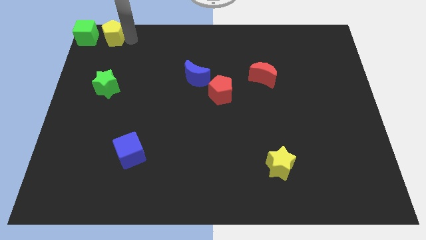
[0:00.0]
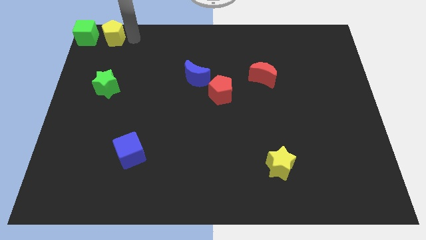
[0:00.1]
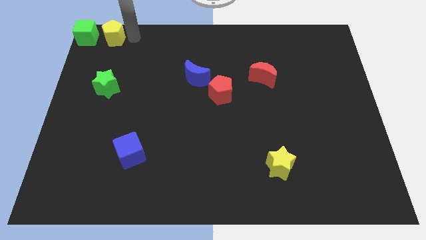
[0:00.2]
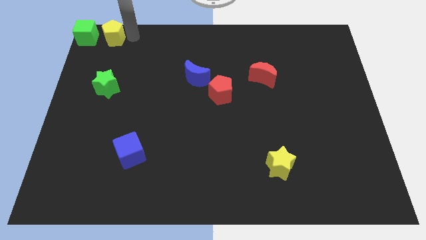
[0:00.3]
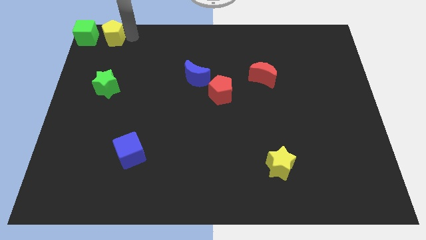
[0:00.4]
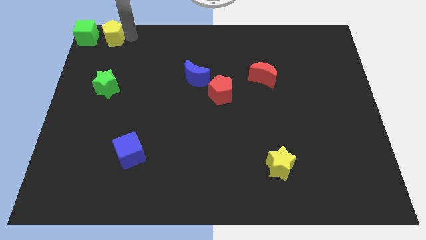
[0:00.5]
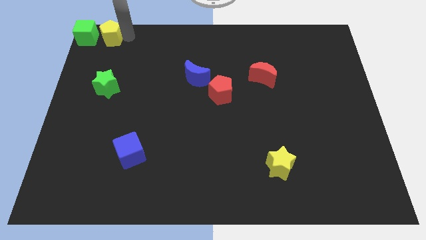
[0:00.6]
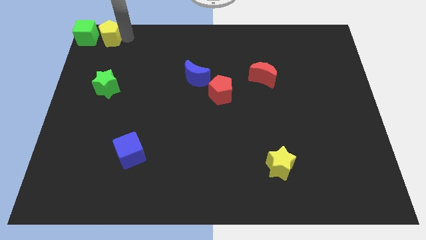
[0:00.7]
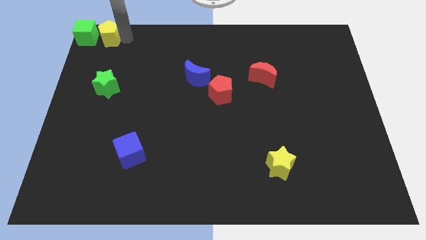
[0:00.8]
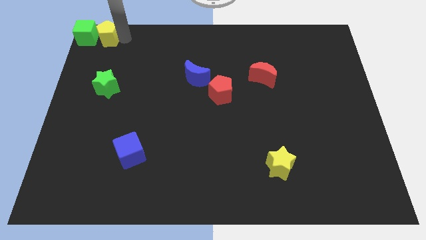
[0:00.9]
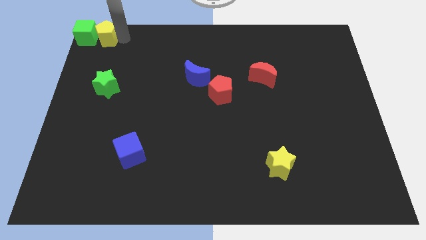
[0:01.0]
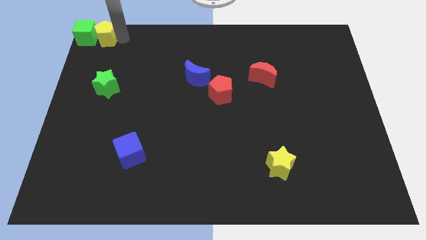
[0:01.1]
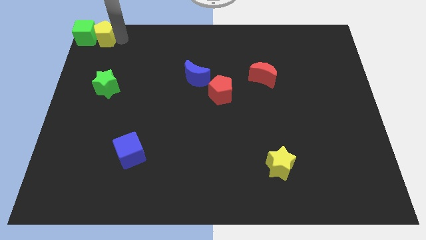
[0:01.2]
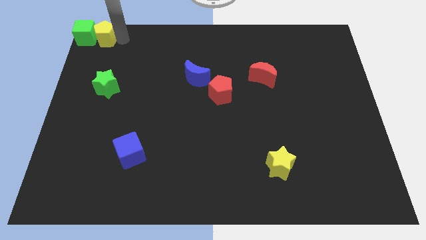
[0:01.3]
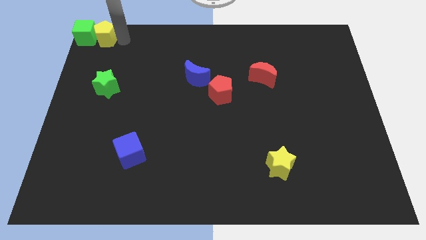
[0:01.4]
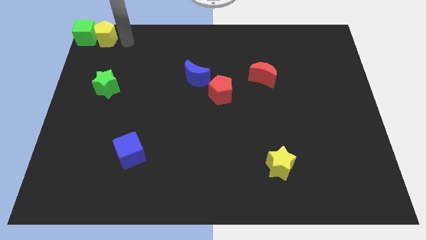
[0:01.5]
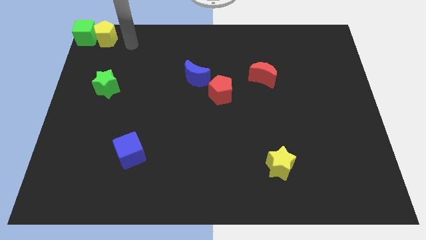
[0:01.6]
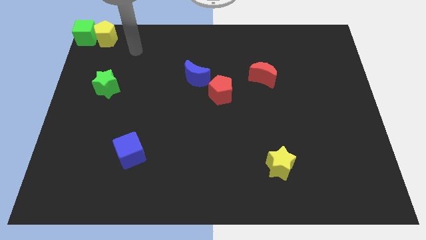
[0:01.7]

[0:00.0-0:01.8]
push the yellow pentagon into the green cube

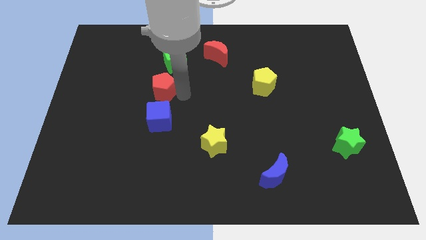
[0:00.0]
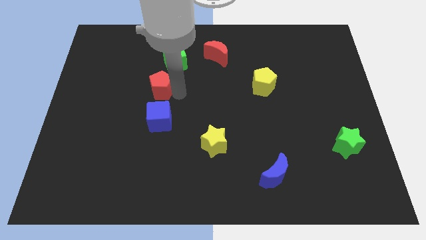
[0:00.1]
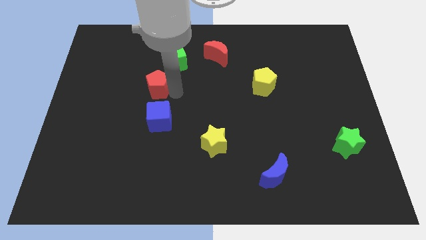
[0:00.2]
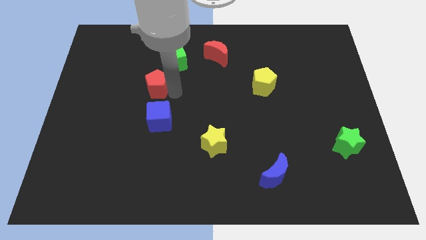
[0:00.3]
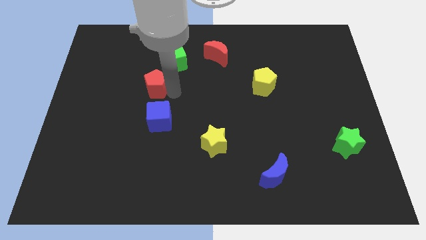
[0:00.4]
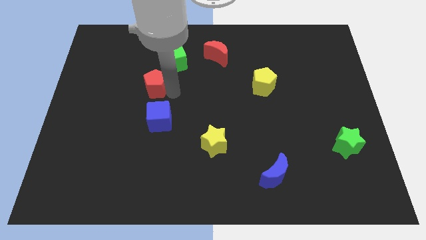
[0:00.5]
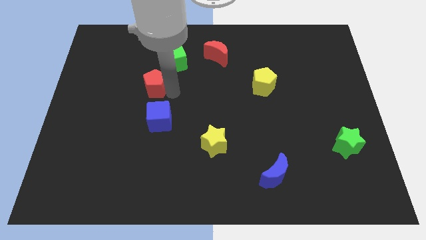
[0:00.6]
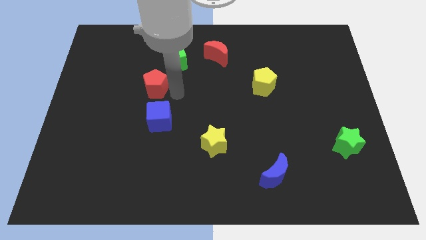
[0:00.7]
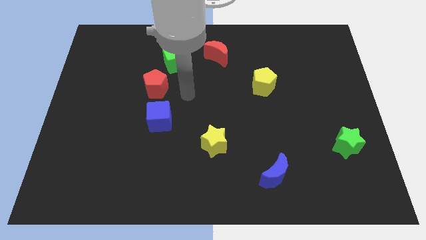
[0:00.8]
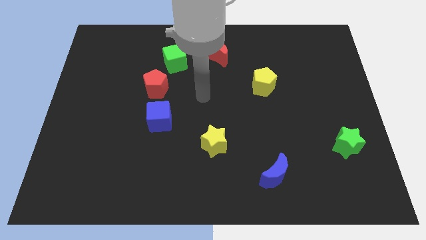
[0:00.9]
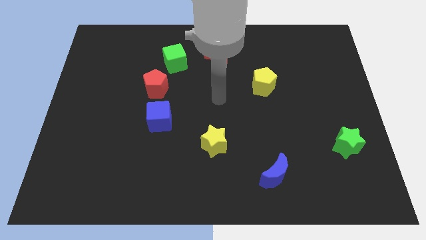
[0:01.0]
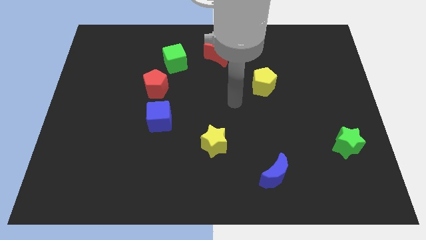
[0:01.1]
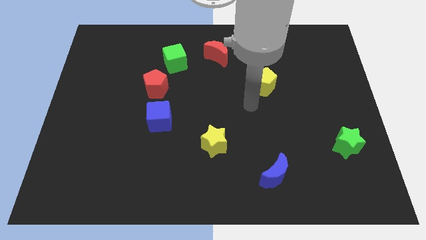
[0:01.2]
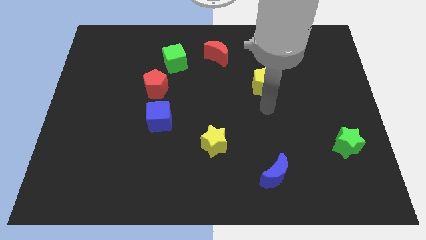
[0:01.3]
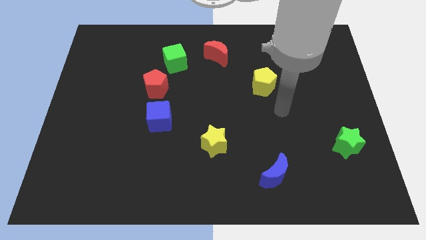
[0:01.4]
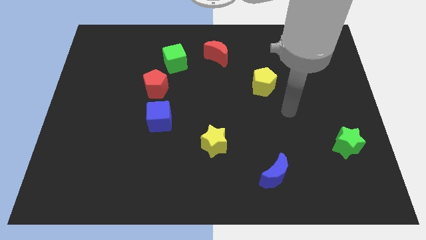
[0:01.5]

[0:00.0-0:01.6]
move the yellow pentagon towards top side

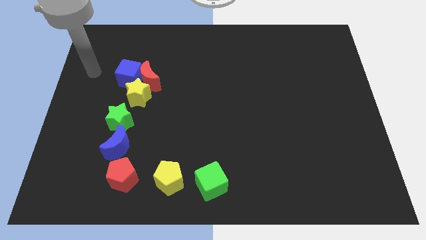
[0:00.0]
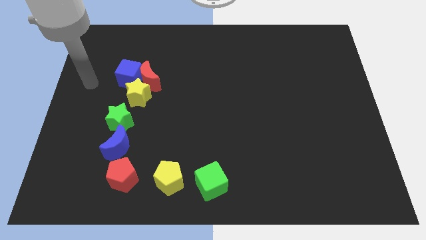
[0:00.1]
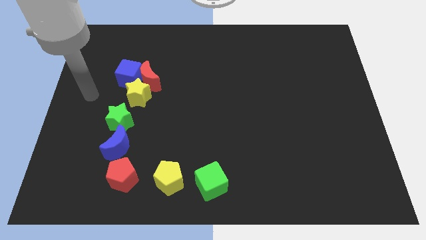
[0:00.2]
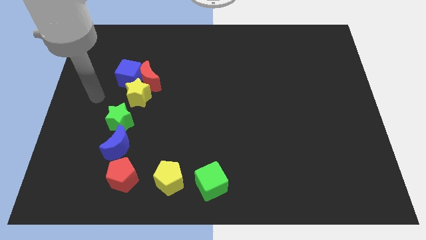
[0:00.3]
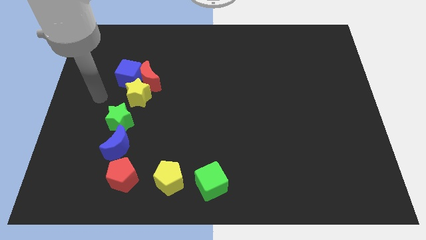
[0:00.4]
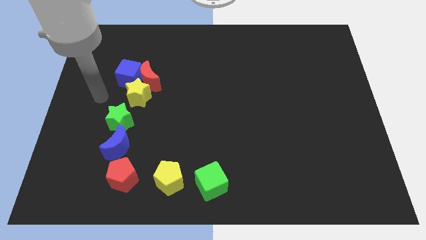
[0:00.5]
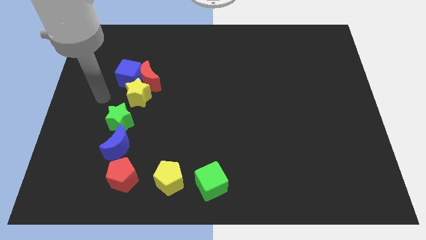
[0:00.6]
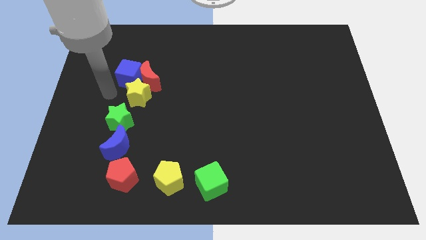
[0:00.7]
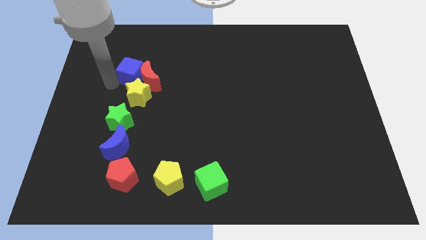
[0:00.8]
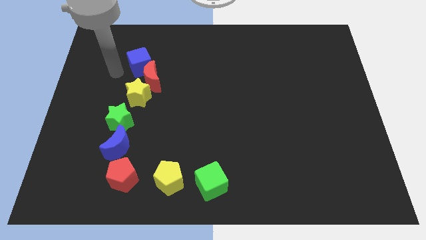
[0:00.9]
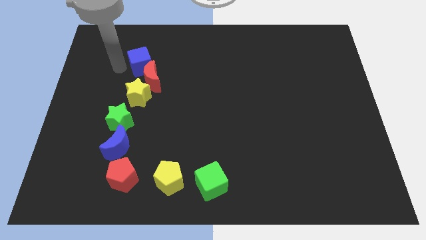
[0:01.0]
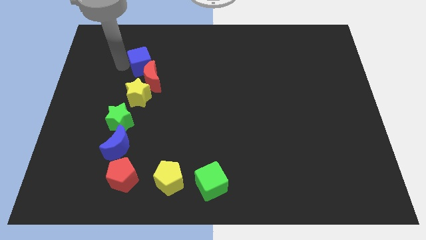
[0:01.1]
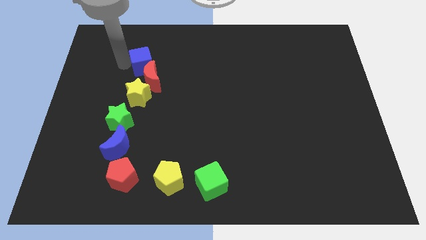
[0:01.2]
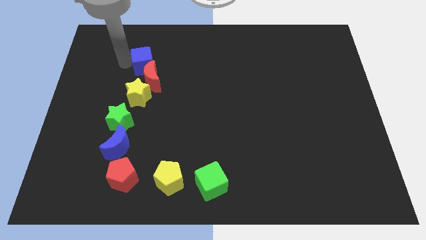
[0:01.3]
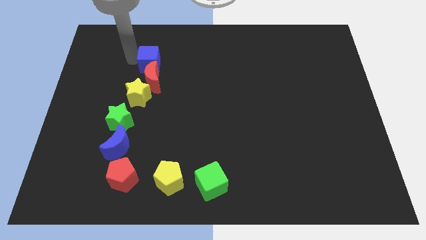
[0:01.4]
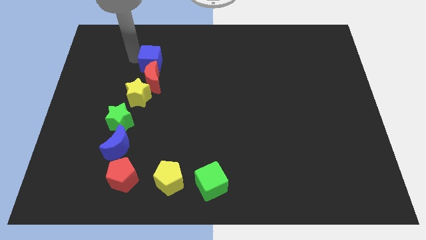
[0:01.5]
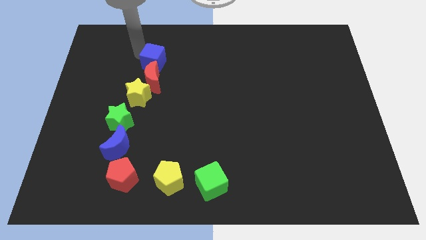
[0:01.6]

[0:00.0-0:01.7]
put the blue cube vertically above the red moon

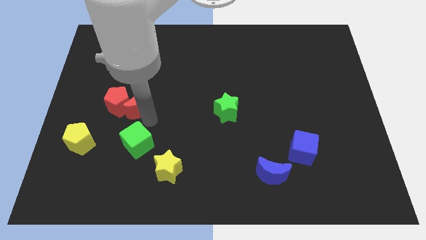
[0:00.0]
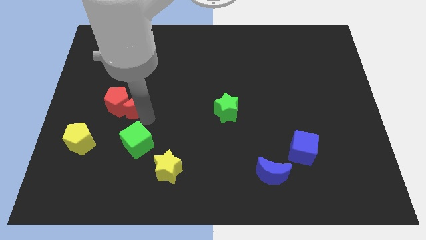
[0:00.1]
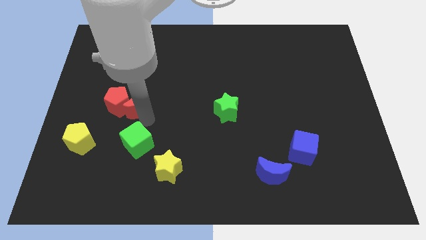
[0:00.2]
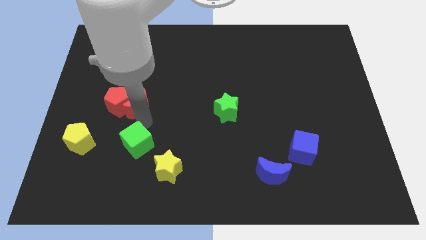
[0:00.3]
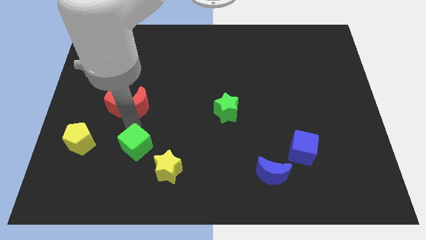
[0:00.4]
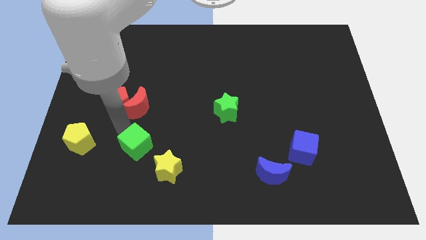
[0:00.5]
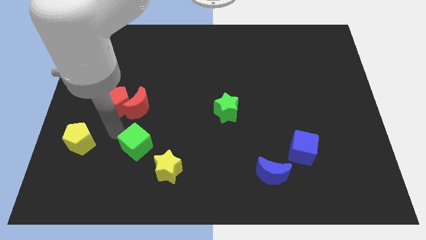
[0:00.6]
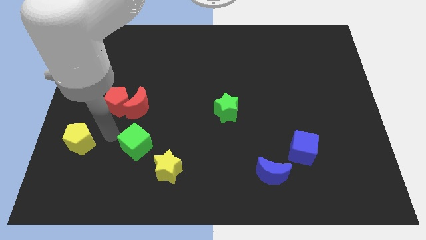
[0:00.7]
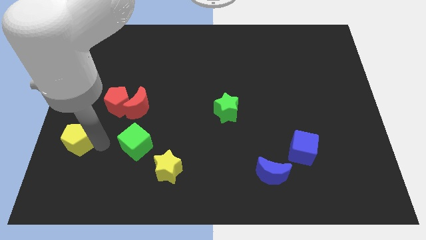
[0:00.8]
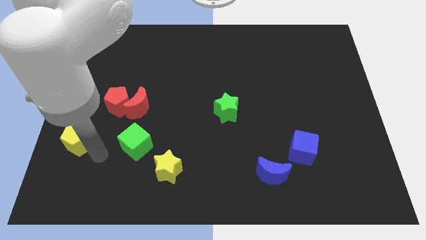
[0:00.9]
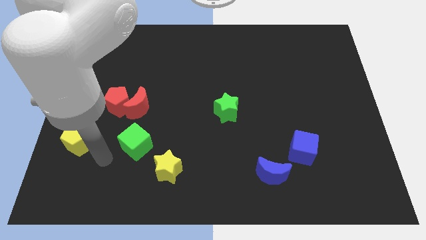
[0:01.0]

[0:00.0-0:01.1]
move the arm to the bottom left of the green cube

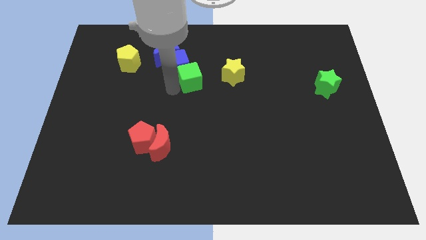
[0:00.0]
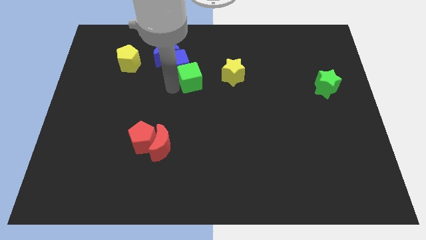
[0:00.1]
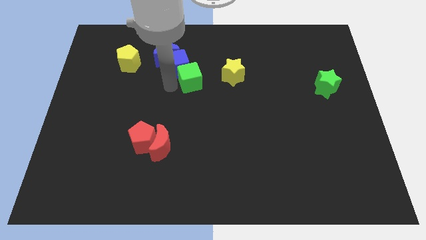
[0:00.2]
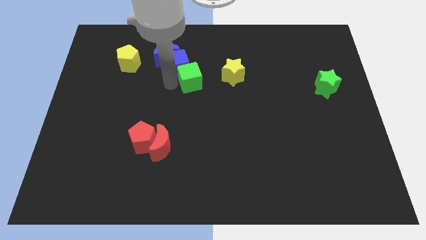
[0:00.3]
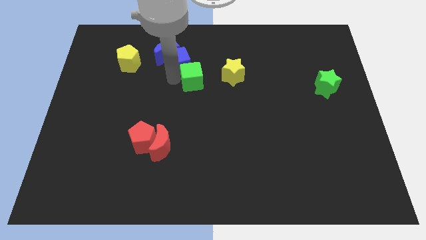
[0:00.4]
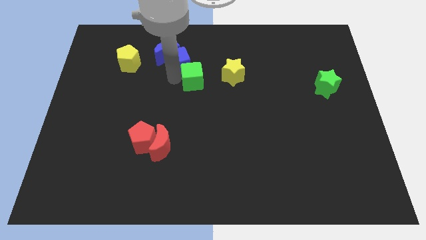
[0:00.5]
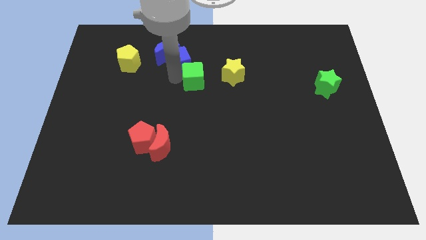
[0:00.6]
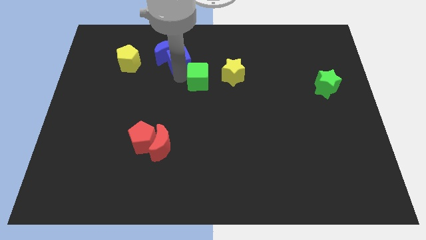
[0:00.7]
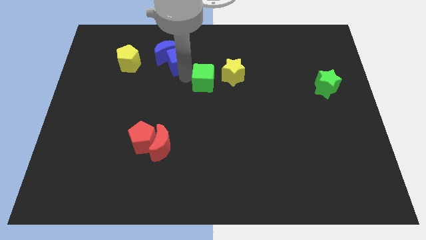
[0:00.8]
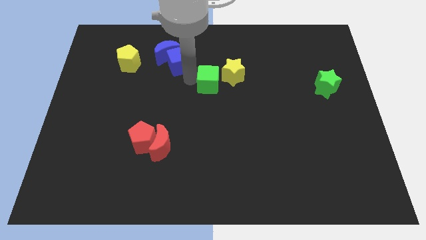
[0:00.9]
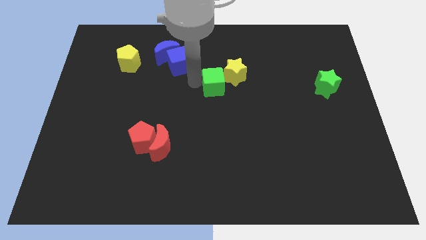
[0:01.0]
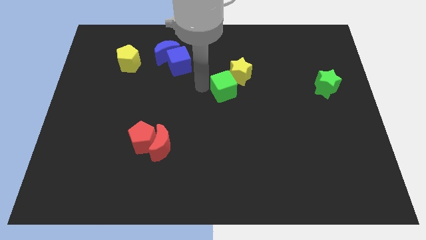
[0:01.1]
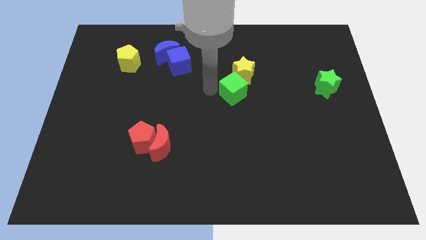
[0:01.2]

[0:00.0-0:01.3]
separate the blue cube and green cube

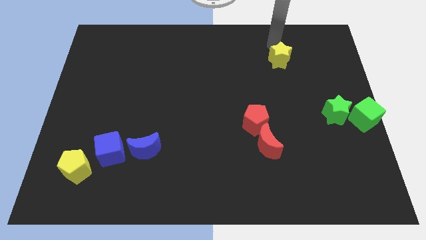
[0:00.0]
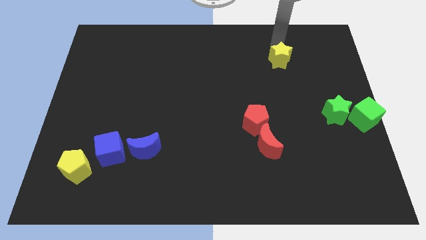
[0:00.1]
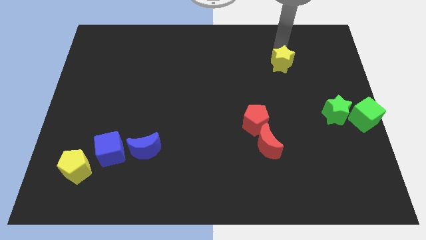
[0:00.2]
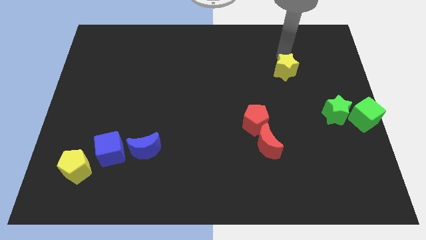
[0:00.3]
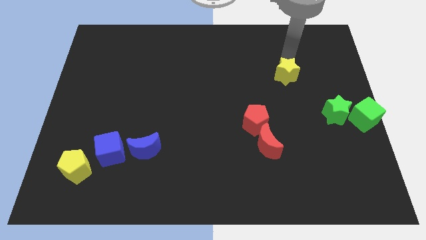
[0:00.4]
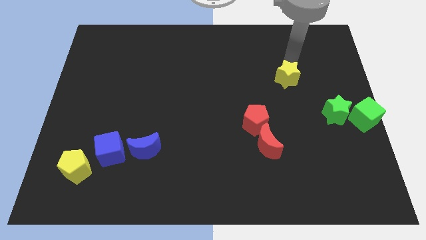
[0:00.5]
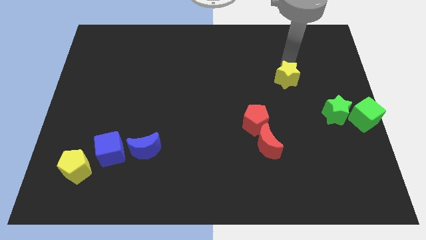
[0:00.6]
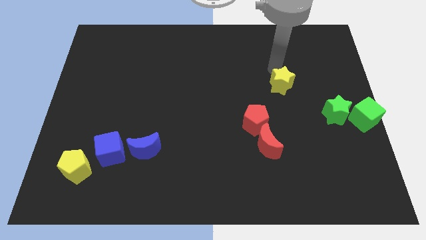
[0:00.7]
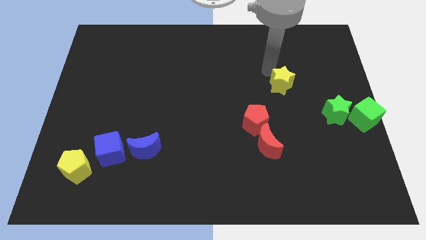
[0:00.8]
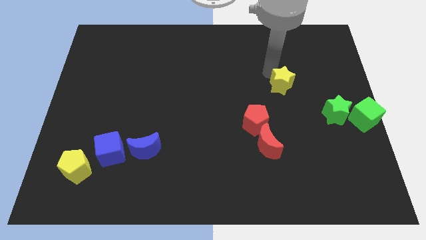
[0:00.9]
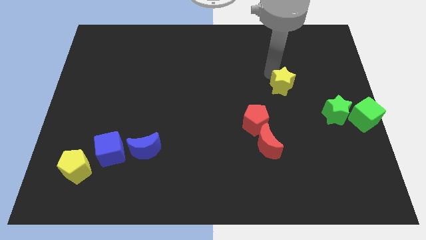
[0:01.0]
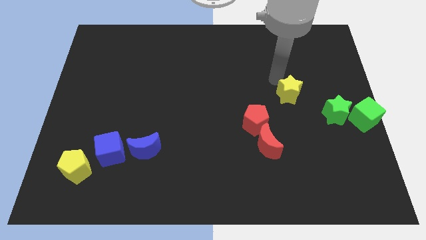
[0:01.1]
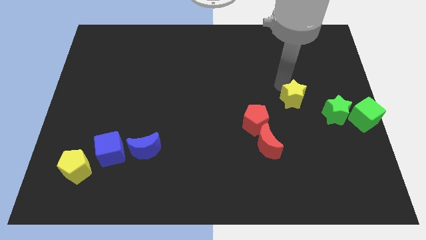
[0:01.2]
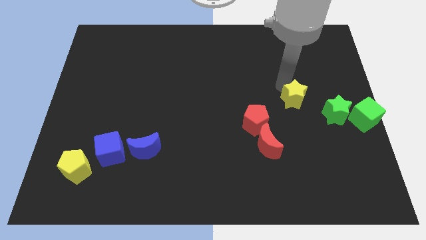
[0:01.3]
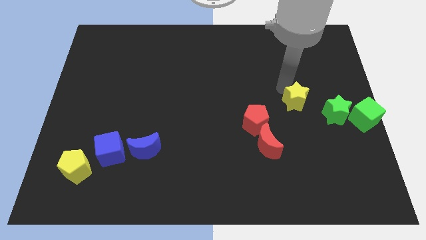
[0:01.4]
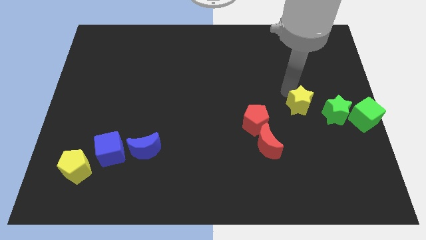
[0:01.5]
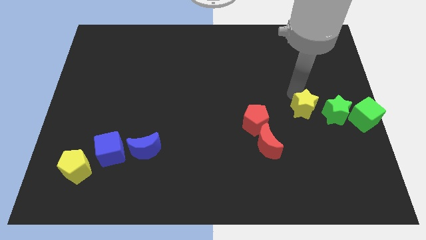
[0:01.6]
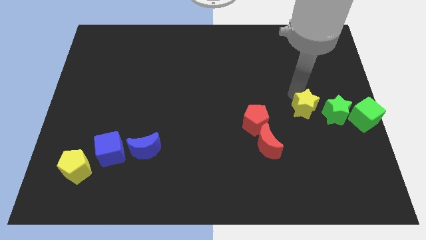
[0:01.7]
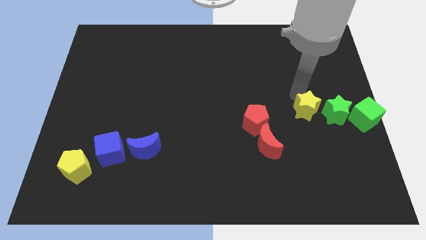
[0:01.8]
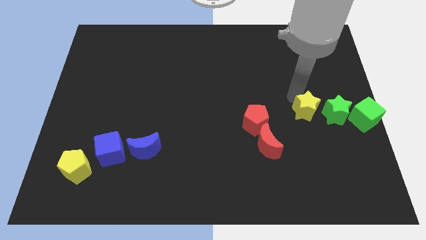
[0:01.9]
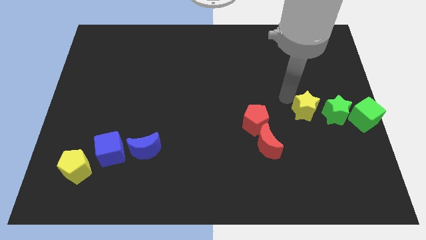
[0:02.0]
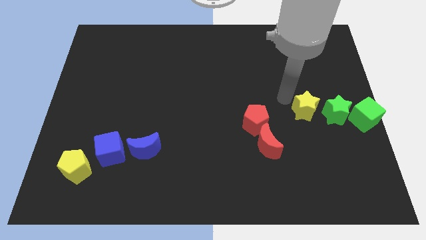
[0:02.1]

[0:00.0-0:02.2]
push the yellow star to the left of the green star
